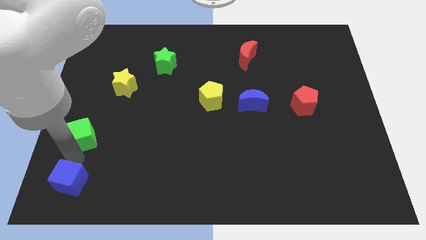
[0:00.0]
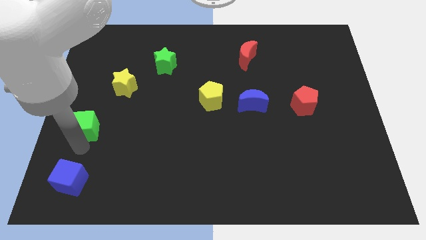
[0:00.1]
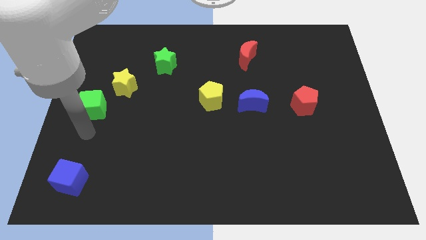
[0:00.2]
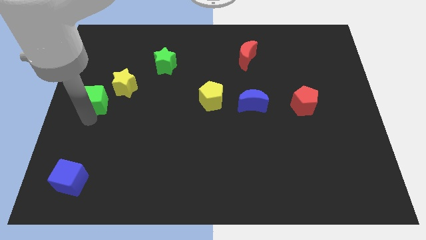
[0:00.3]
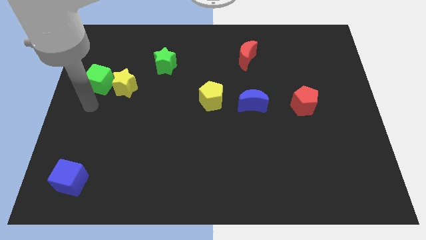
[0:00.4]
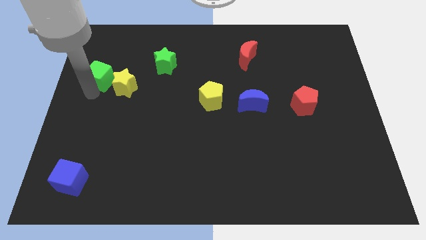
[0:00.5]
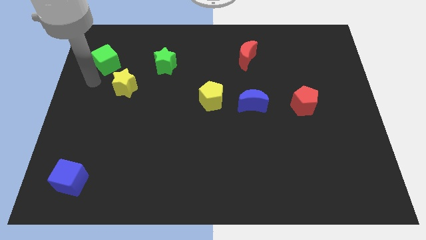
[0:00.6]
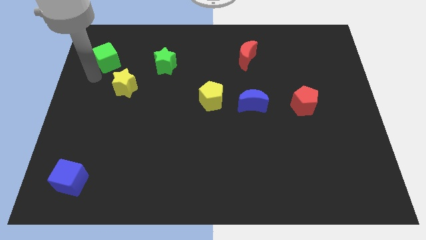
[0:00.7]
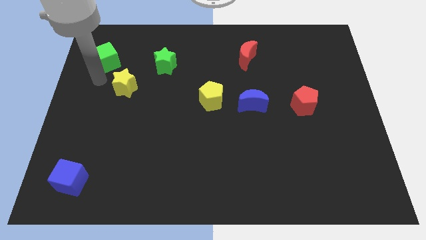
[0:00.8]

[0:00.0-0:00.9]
push the green cube towards the top left side of the board

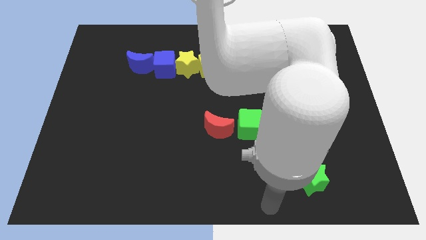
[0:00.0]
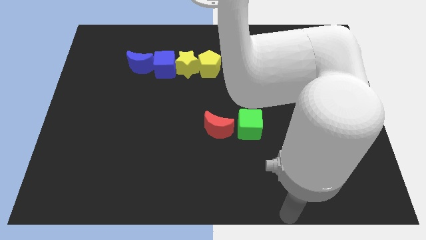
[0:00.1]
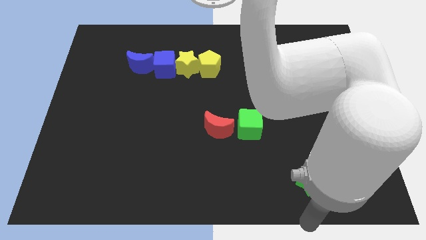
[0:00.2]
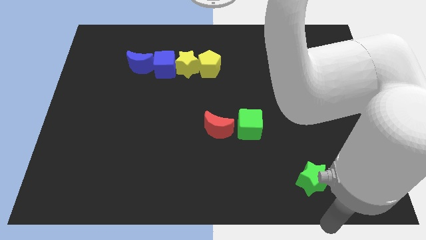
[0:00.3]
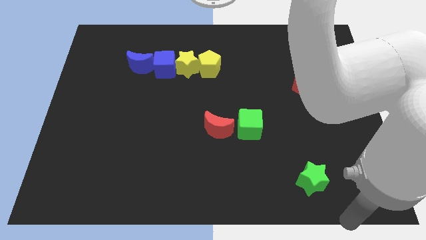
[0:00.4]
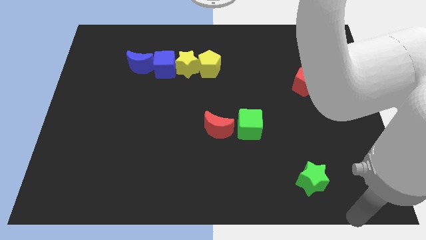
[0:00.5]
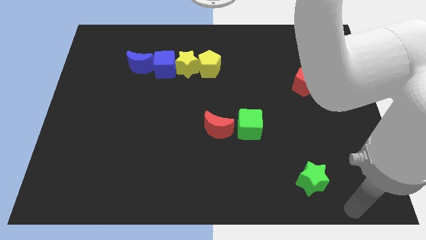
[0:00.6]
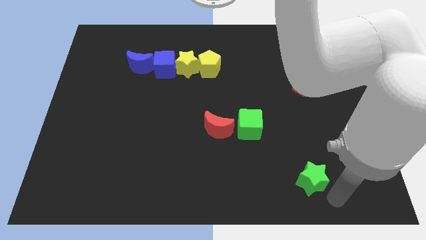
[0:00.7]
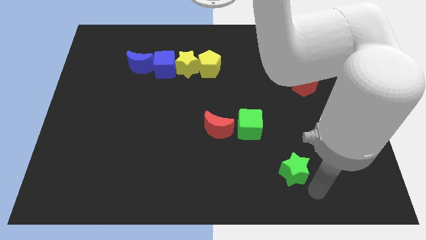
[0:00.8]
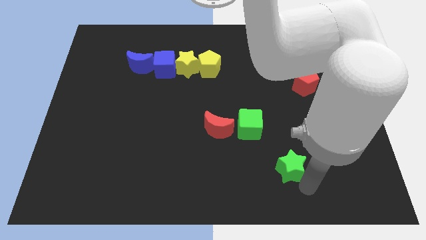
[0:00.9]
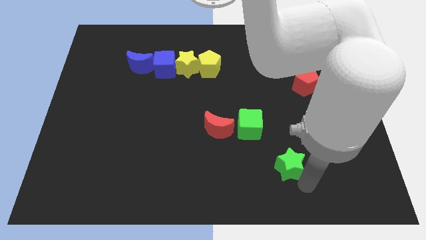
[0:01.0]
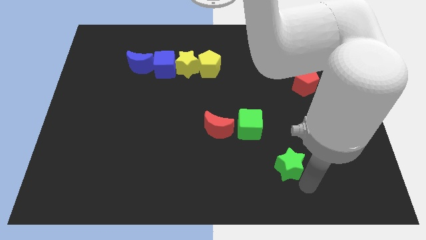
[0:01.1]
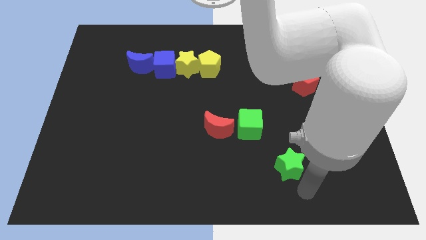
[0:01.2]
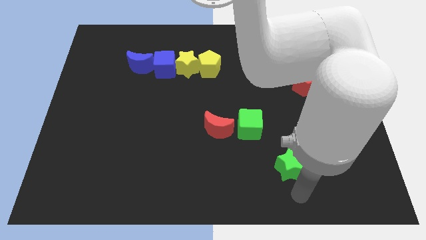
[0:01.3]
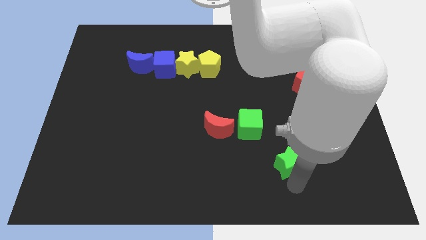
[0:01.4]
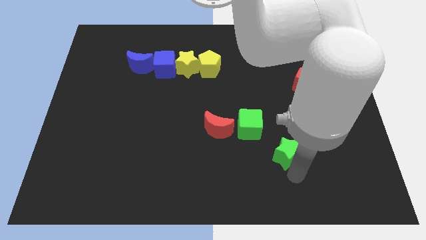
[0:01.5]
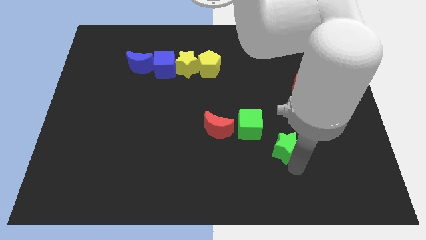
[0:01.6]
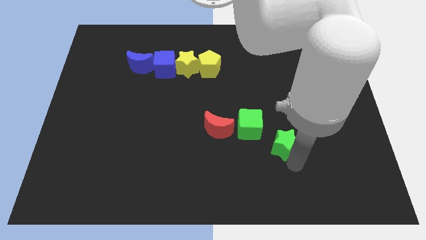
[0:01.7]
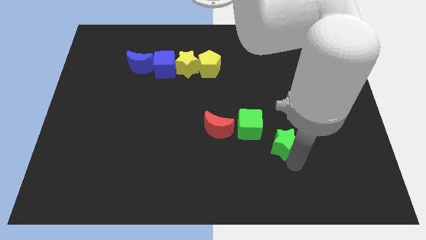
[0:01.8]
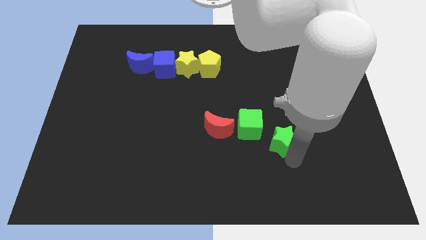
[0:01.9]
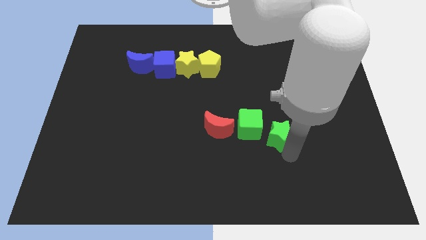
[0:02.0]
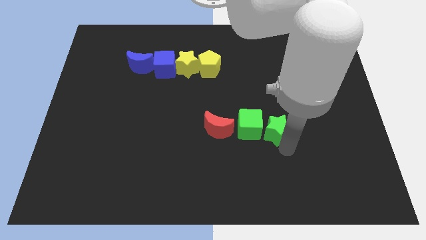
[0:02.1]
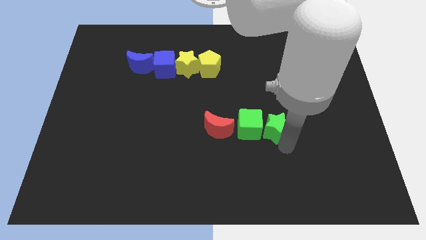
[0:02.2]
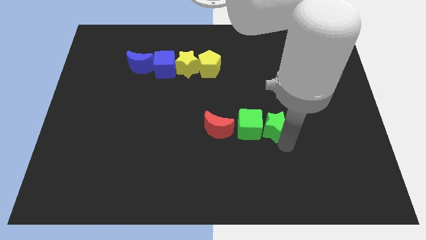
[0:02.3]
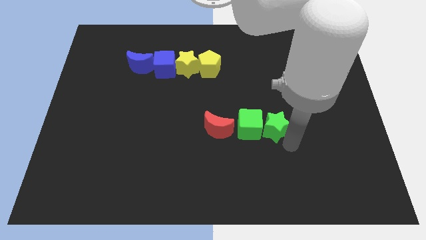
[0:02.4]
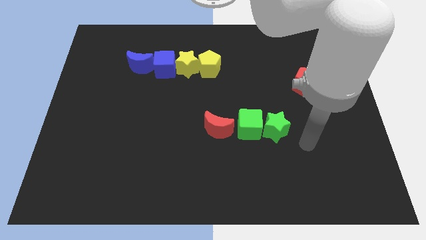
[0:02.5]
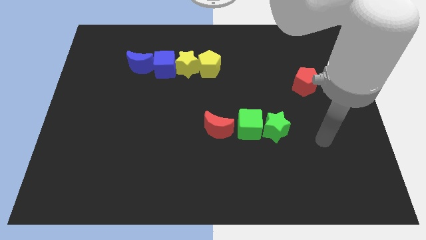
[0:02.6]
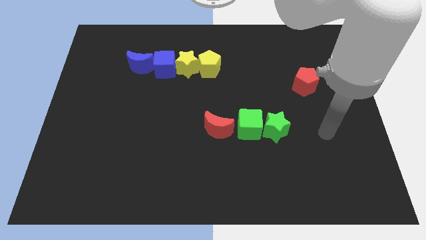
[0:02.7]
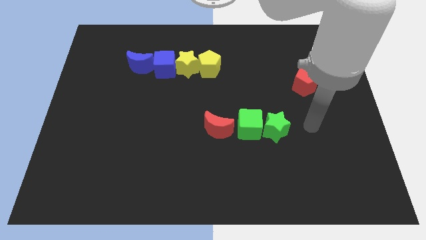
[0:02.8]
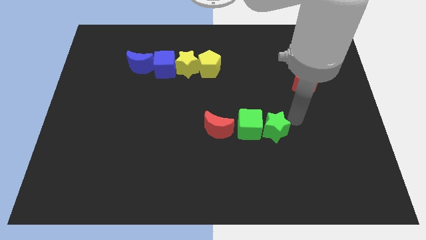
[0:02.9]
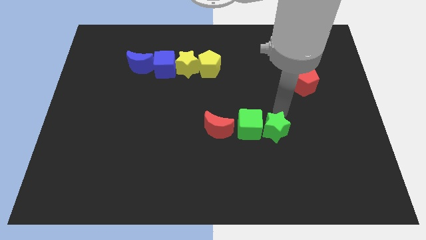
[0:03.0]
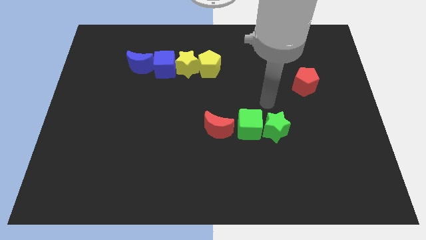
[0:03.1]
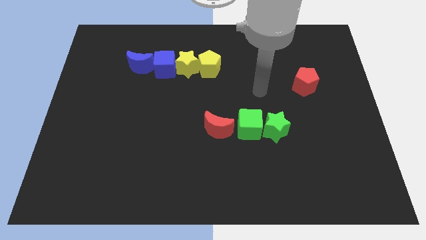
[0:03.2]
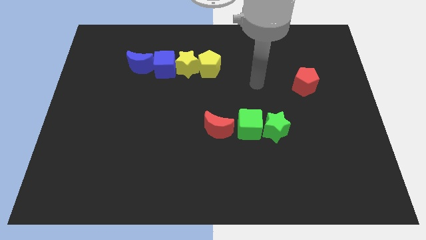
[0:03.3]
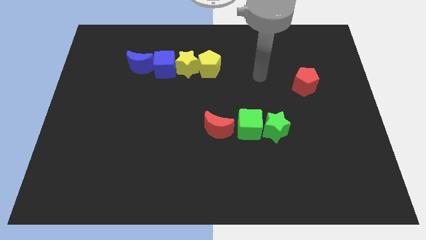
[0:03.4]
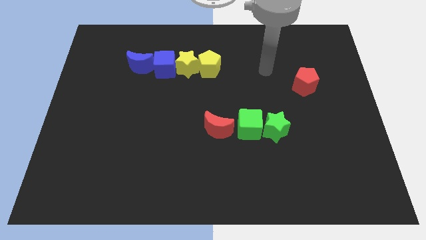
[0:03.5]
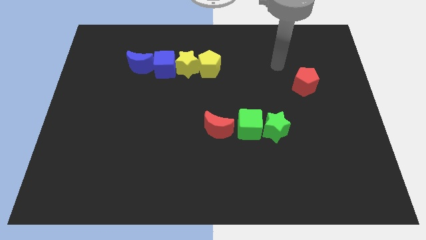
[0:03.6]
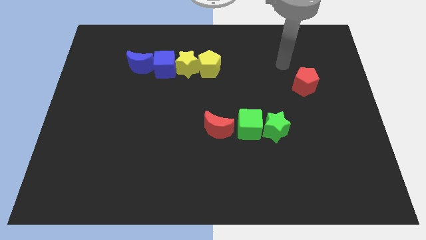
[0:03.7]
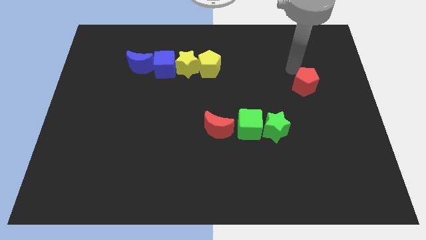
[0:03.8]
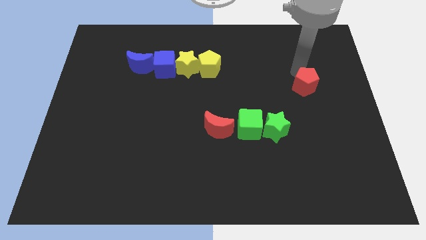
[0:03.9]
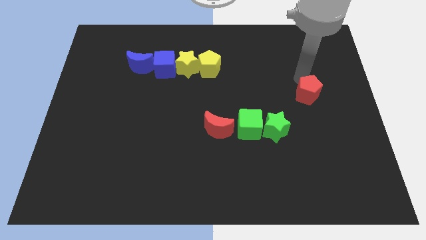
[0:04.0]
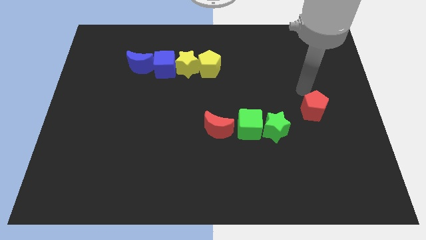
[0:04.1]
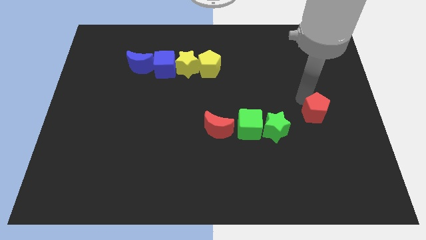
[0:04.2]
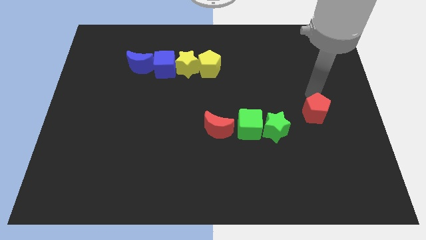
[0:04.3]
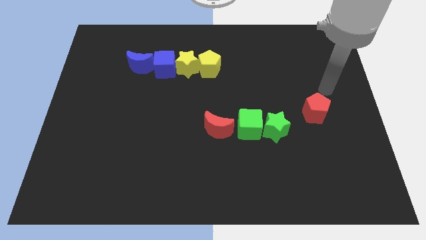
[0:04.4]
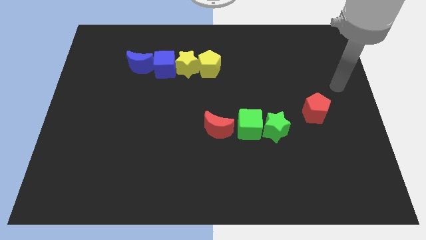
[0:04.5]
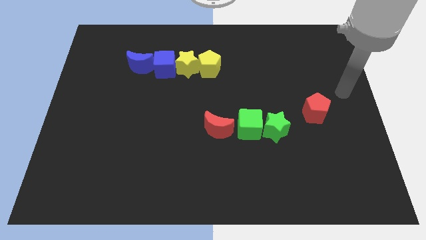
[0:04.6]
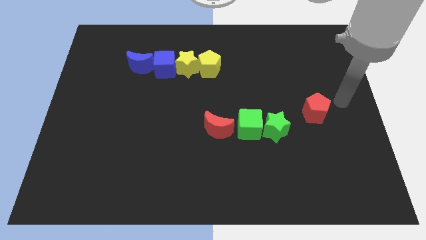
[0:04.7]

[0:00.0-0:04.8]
push the green star close to green cube

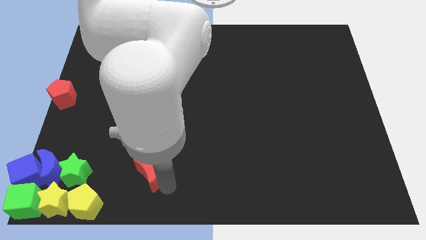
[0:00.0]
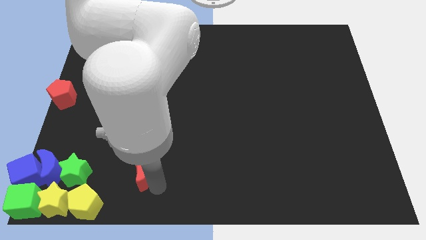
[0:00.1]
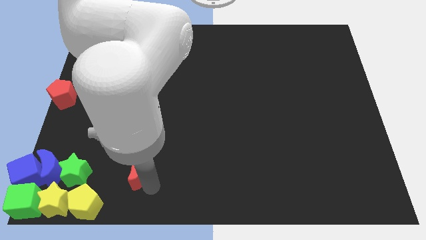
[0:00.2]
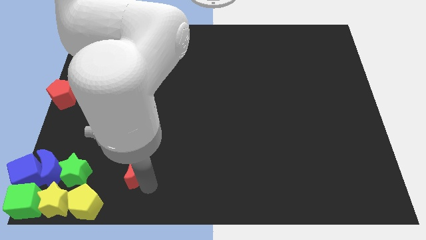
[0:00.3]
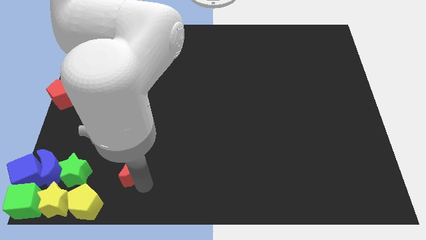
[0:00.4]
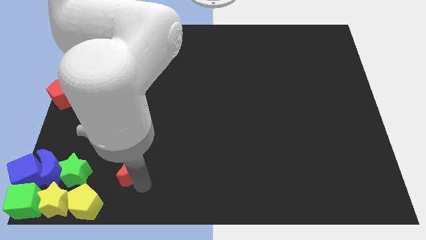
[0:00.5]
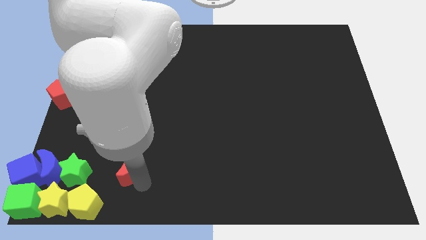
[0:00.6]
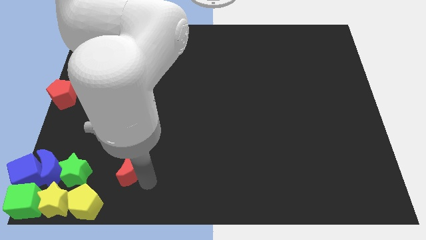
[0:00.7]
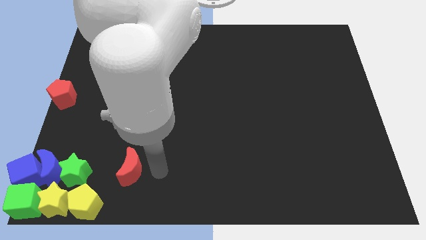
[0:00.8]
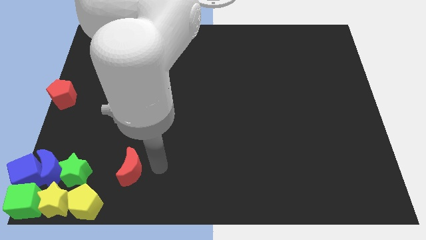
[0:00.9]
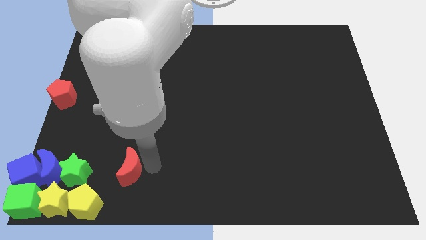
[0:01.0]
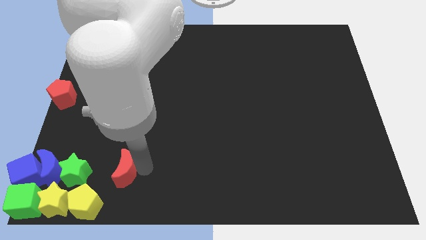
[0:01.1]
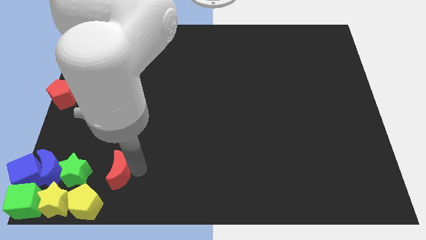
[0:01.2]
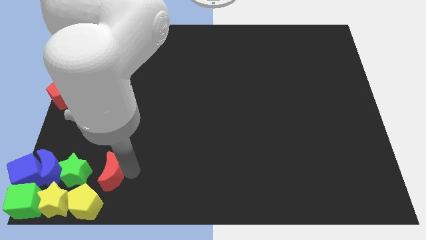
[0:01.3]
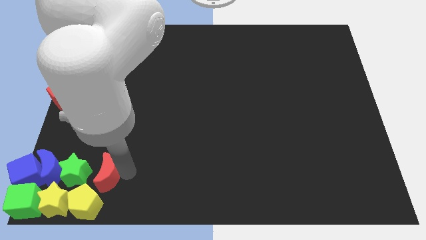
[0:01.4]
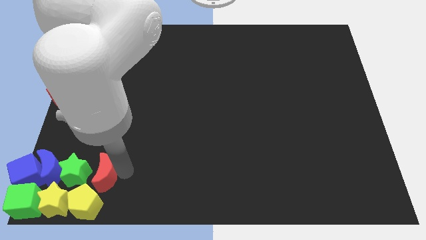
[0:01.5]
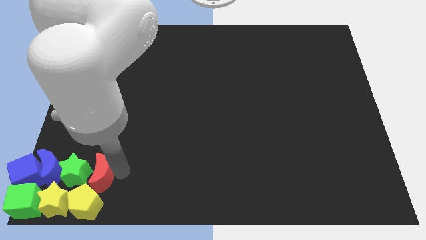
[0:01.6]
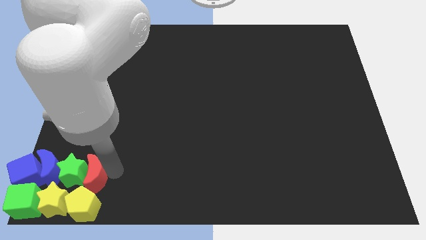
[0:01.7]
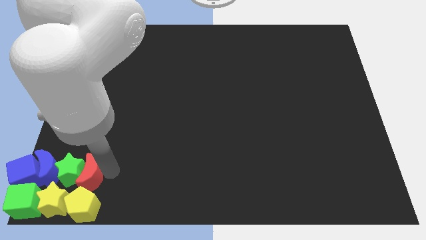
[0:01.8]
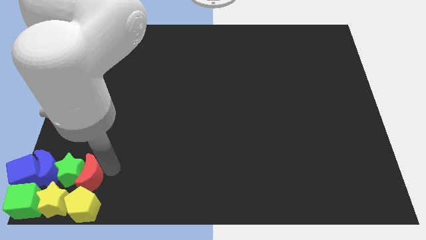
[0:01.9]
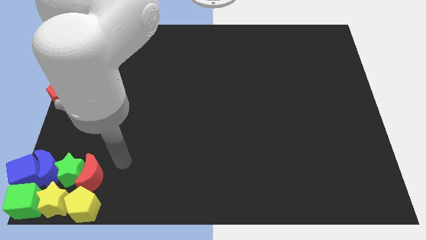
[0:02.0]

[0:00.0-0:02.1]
push the red crescent into the green star

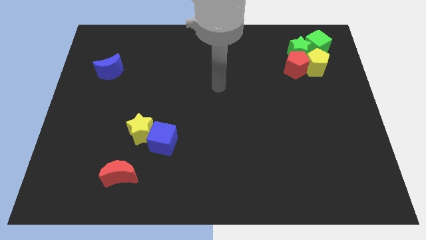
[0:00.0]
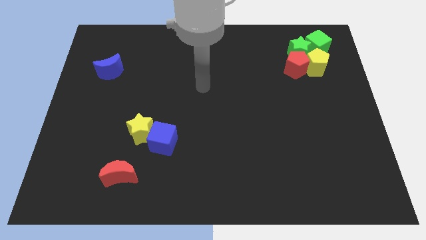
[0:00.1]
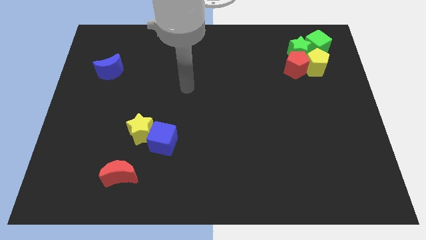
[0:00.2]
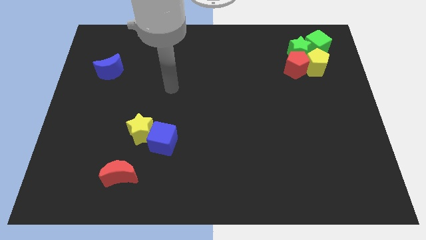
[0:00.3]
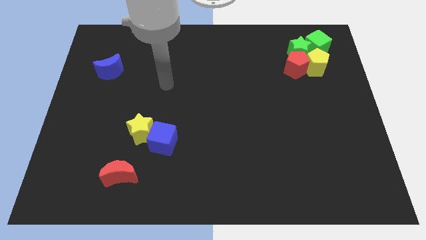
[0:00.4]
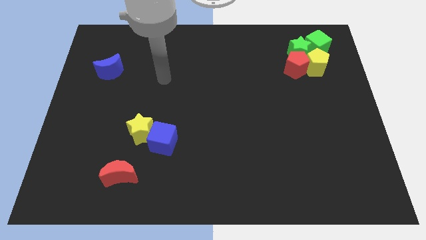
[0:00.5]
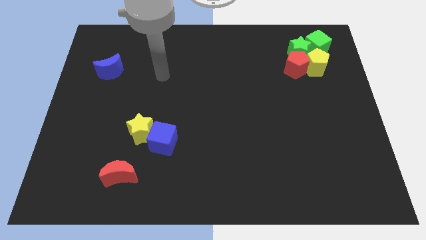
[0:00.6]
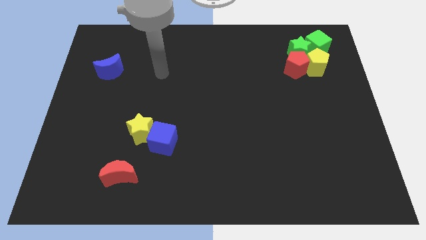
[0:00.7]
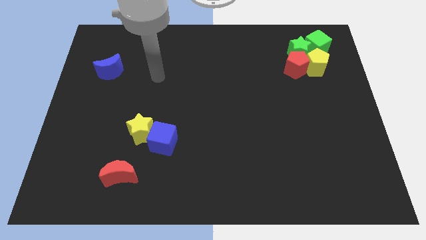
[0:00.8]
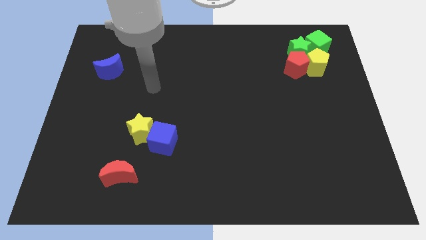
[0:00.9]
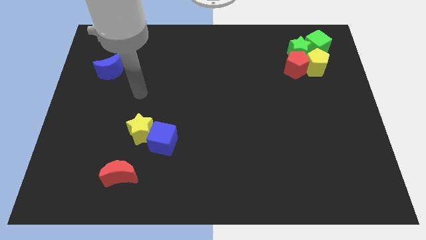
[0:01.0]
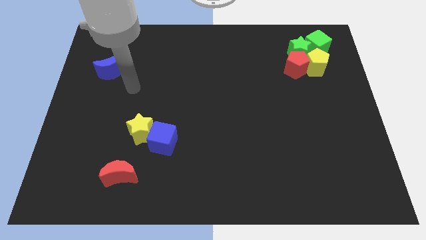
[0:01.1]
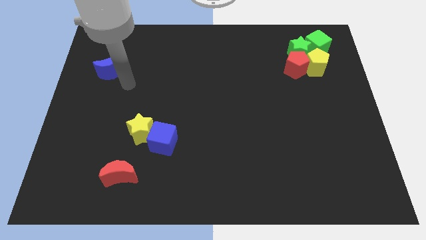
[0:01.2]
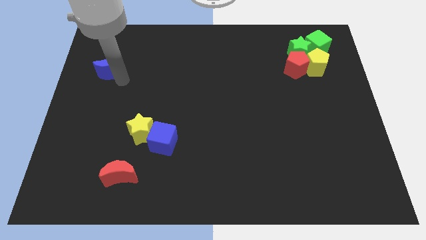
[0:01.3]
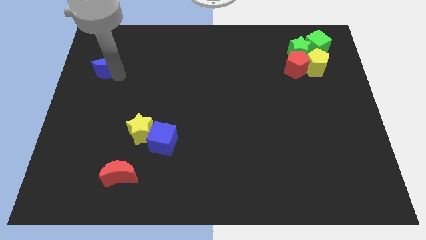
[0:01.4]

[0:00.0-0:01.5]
move your arm bottom right to the blue crescent
